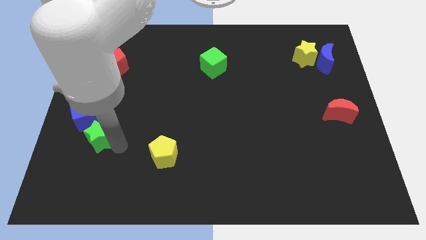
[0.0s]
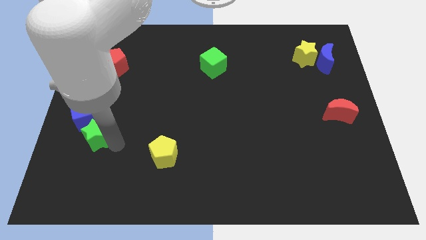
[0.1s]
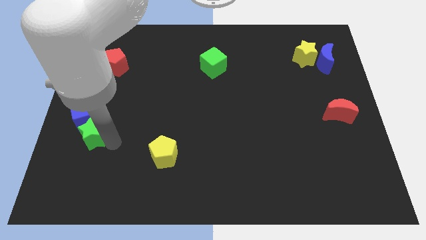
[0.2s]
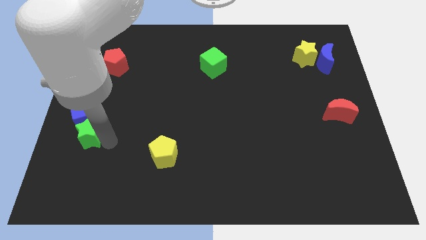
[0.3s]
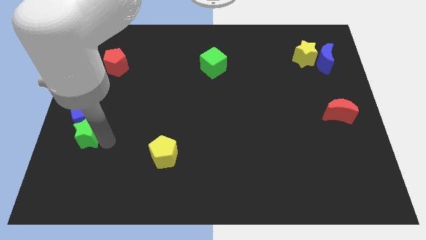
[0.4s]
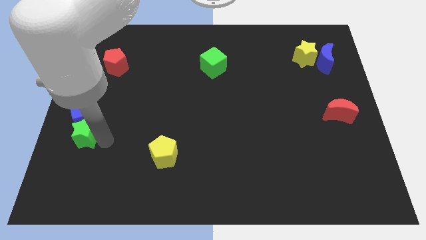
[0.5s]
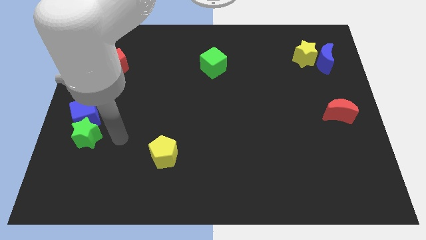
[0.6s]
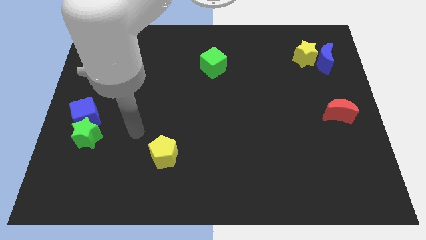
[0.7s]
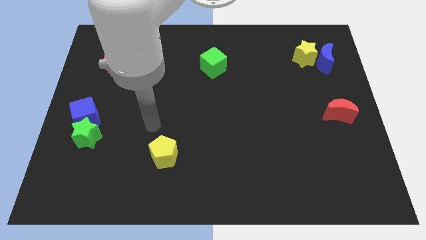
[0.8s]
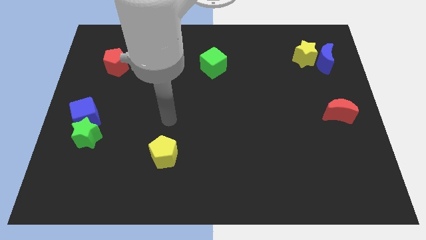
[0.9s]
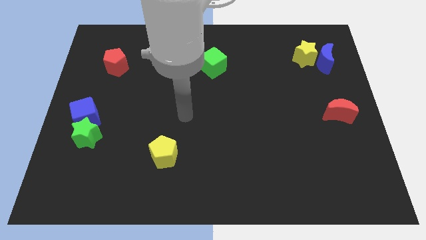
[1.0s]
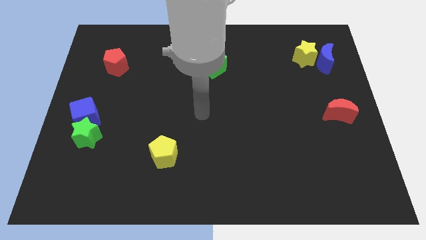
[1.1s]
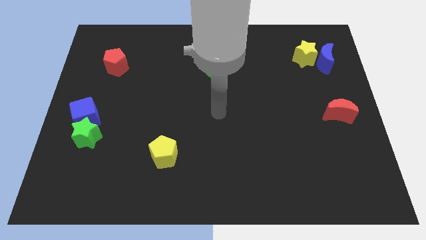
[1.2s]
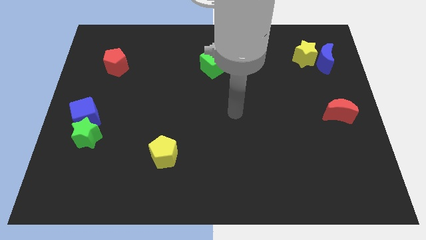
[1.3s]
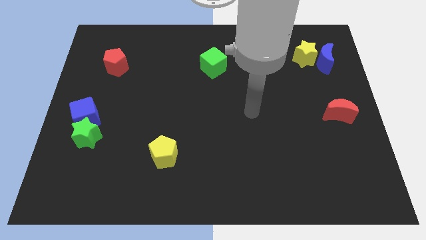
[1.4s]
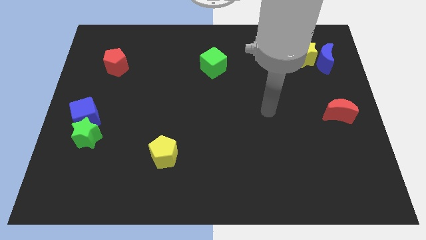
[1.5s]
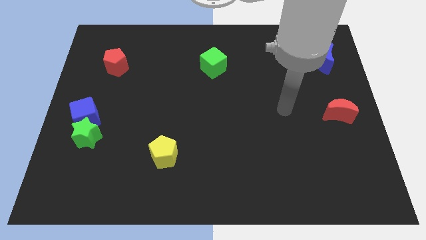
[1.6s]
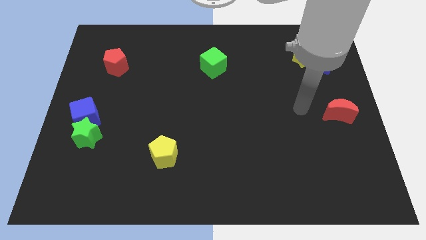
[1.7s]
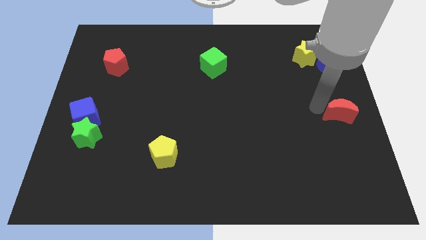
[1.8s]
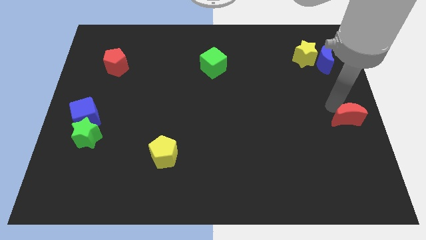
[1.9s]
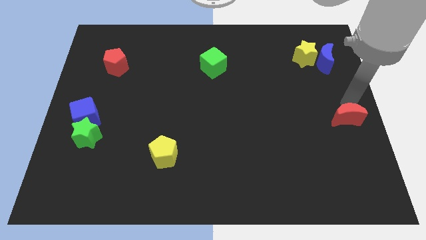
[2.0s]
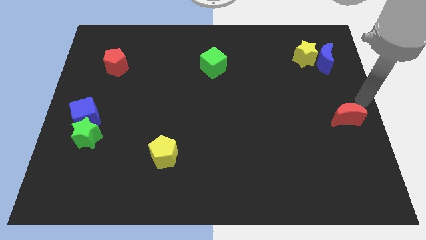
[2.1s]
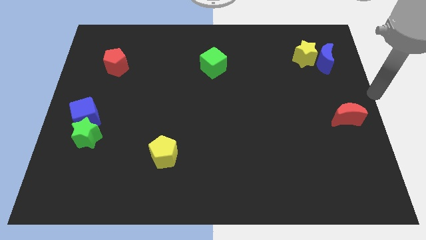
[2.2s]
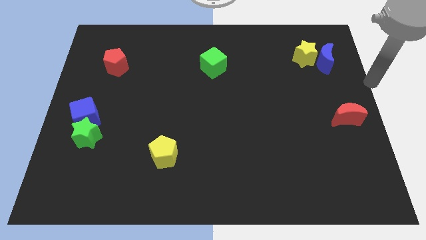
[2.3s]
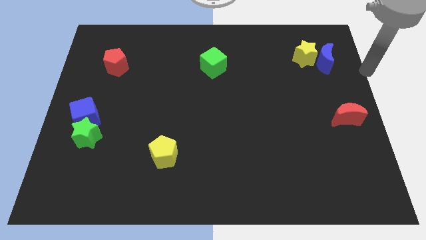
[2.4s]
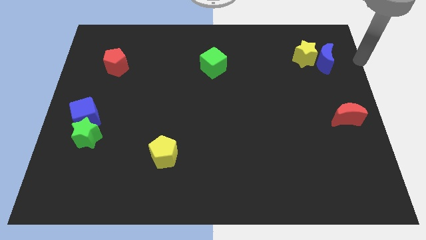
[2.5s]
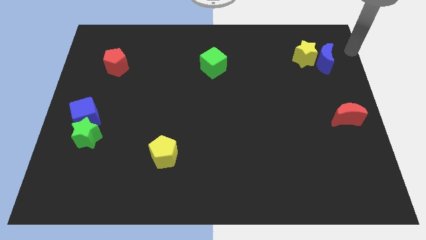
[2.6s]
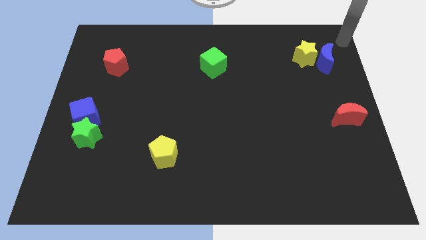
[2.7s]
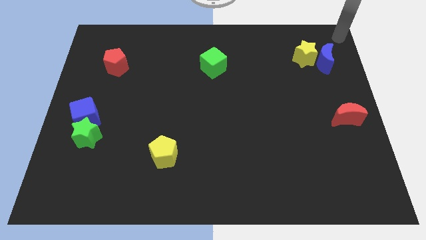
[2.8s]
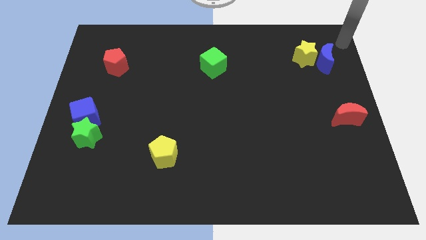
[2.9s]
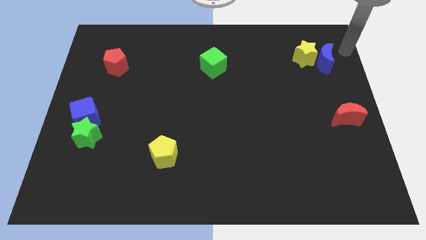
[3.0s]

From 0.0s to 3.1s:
place the arm to the top right of the blue moon

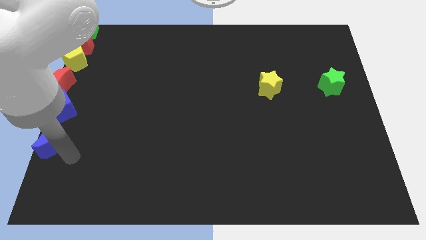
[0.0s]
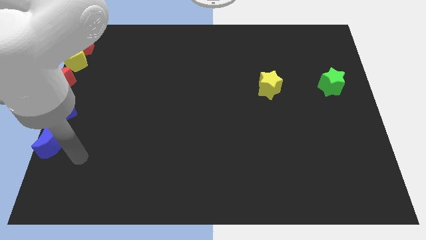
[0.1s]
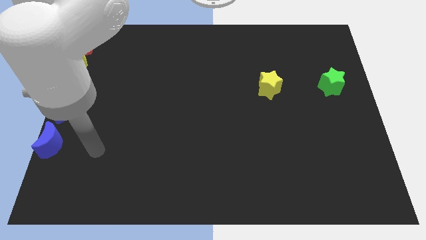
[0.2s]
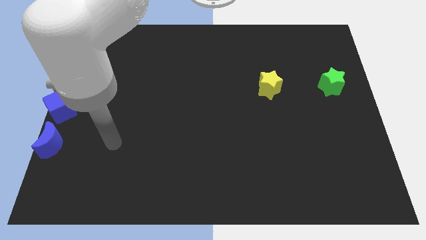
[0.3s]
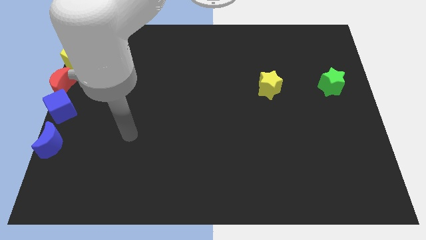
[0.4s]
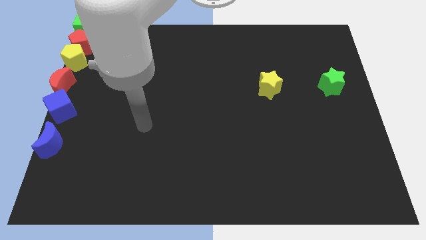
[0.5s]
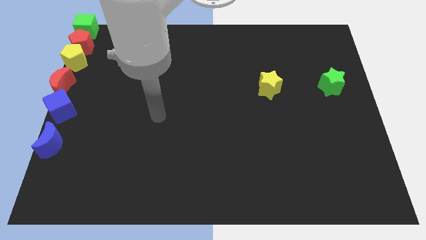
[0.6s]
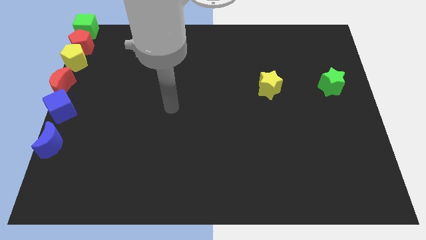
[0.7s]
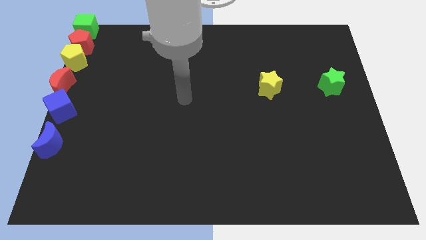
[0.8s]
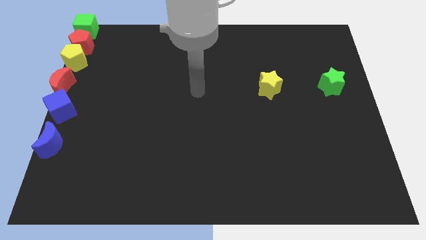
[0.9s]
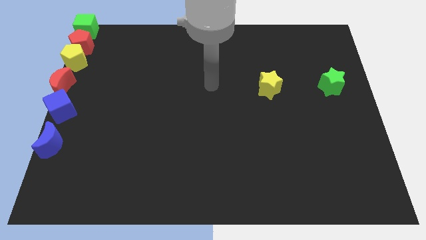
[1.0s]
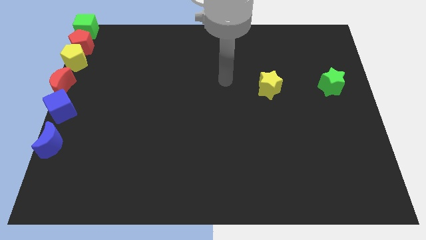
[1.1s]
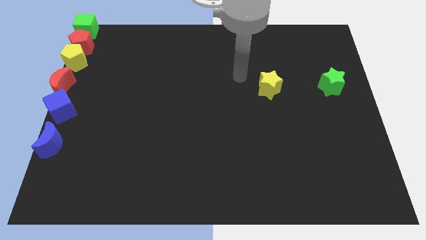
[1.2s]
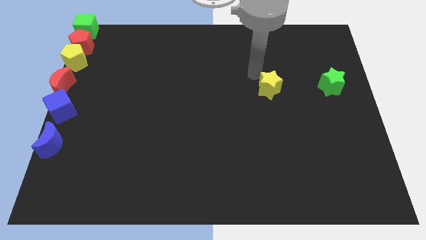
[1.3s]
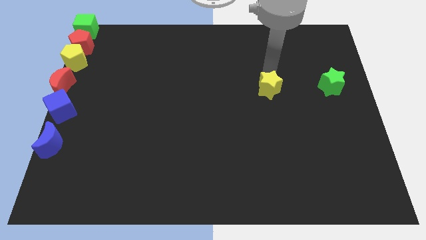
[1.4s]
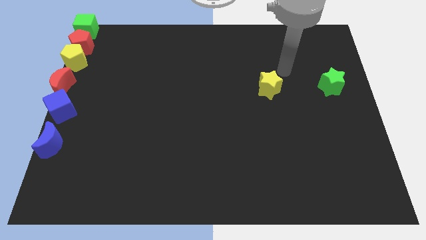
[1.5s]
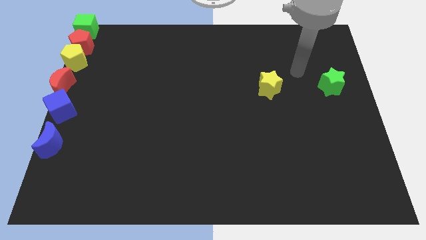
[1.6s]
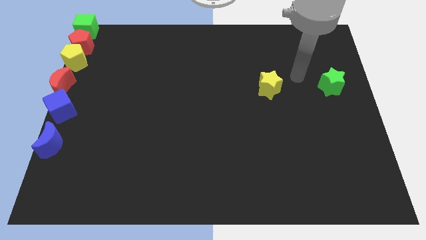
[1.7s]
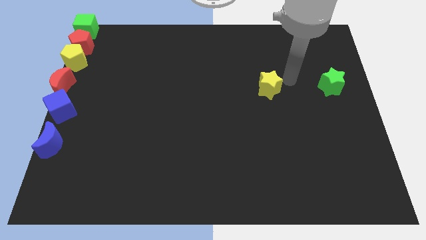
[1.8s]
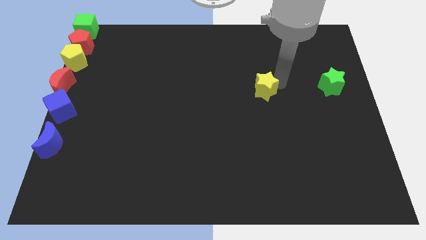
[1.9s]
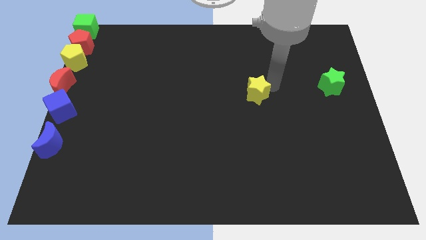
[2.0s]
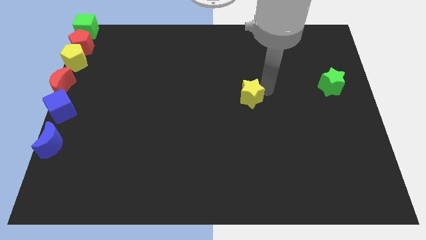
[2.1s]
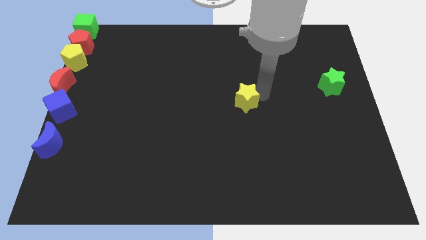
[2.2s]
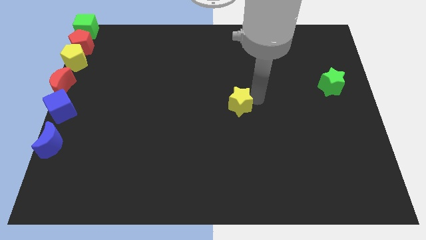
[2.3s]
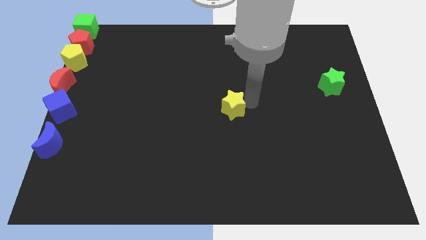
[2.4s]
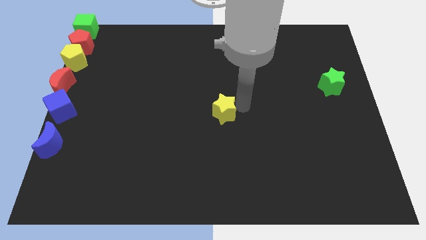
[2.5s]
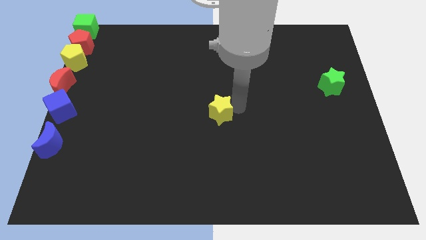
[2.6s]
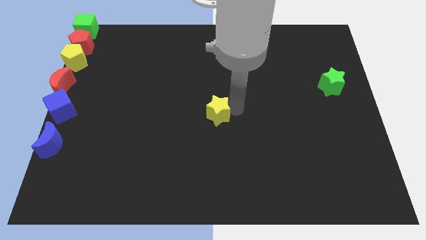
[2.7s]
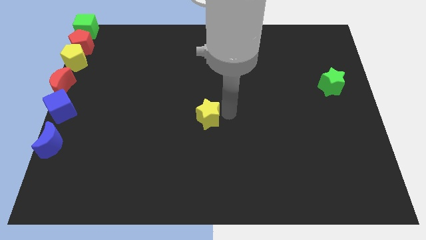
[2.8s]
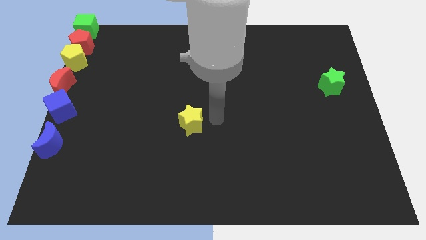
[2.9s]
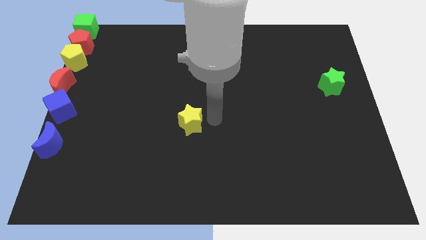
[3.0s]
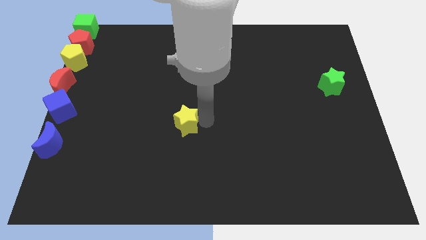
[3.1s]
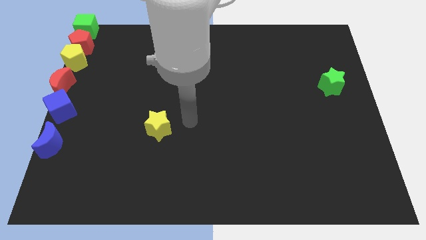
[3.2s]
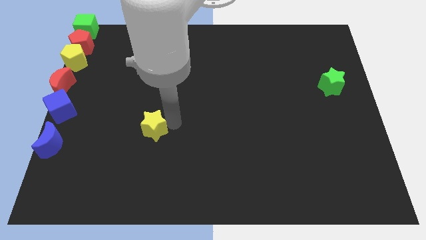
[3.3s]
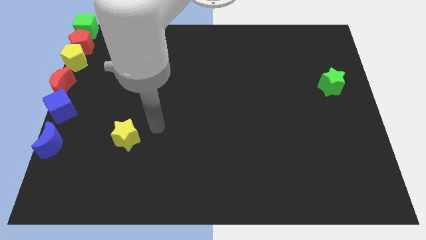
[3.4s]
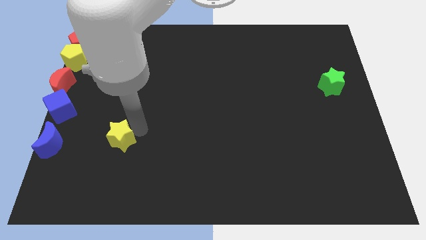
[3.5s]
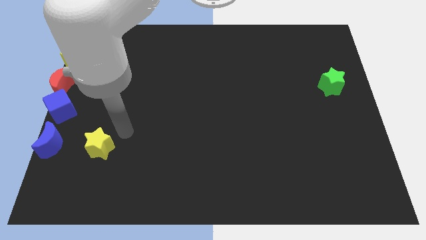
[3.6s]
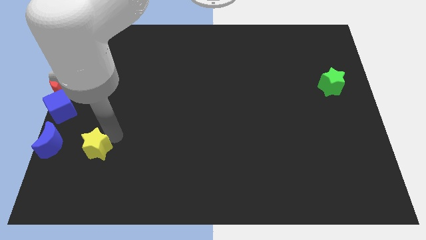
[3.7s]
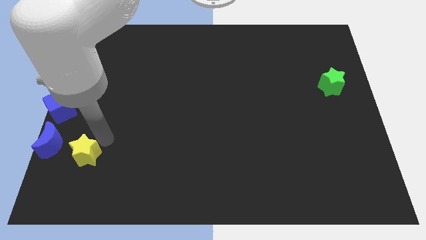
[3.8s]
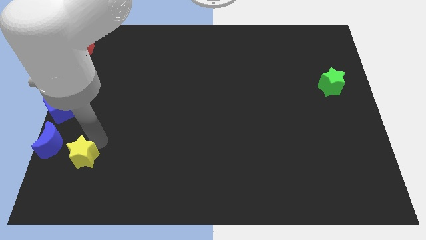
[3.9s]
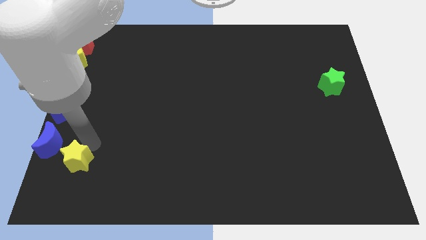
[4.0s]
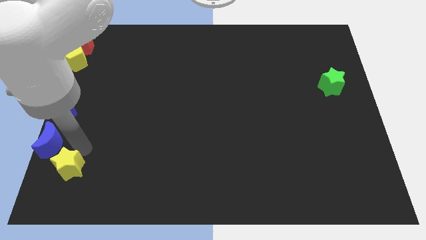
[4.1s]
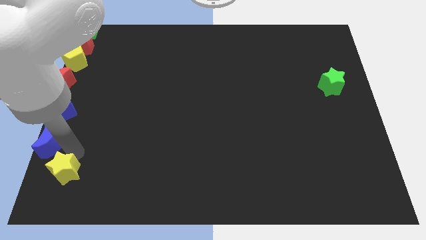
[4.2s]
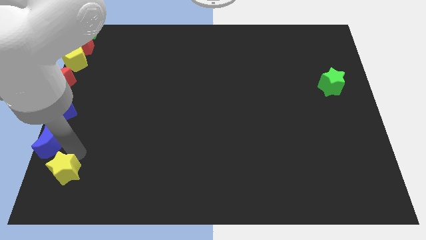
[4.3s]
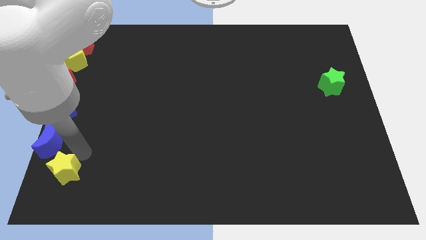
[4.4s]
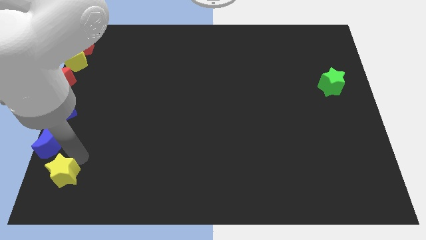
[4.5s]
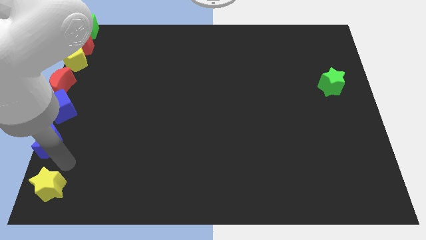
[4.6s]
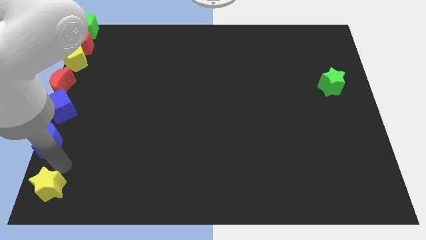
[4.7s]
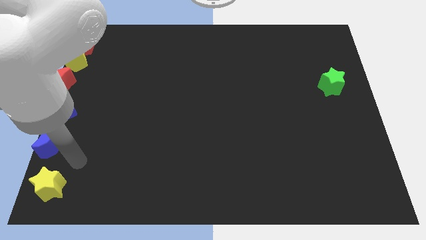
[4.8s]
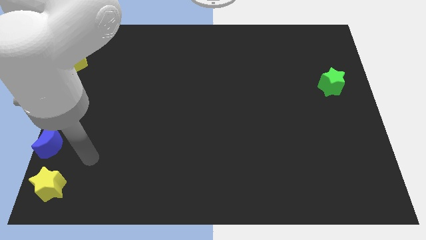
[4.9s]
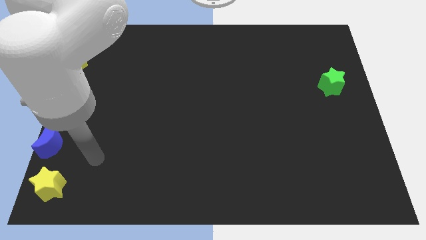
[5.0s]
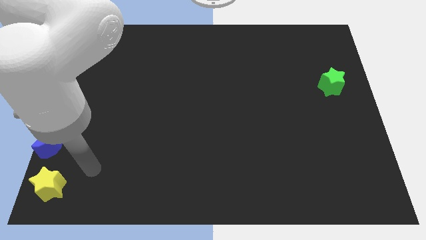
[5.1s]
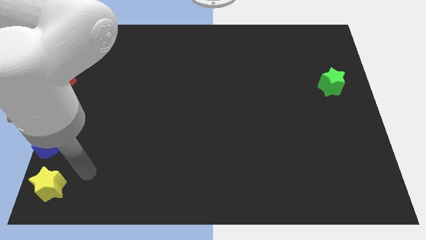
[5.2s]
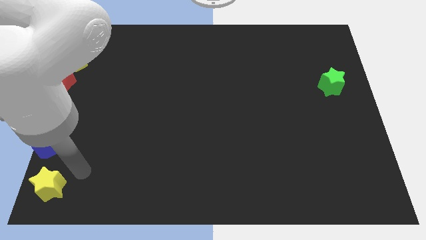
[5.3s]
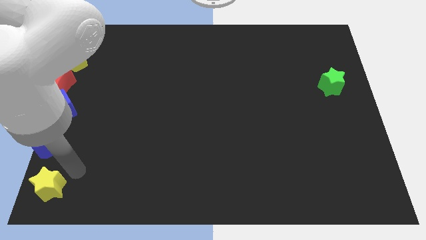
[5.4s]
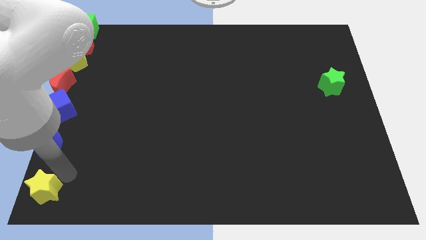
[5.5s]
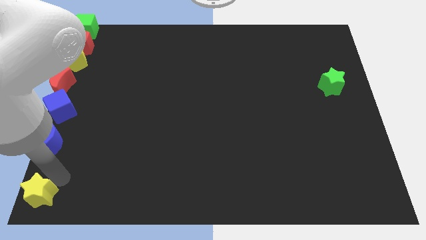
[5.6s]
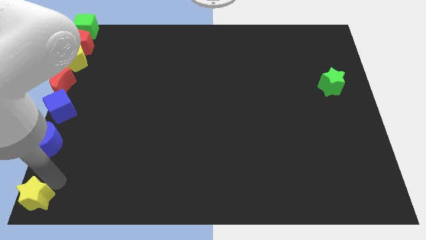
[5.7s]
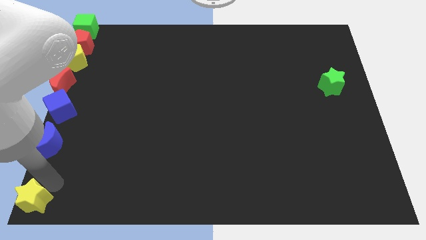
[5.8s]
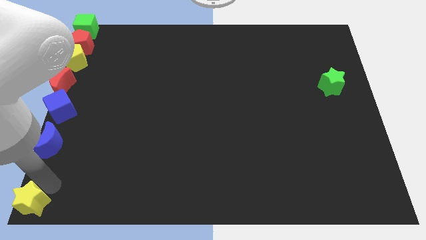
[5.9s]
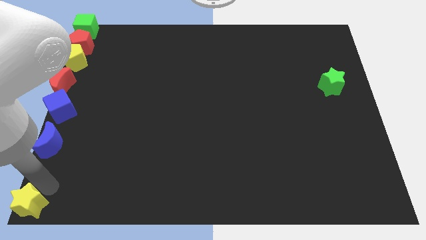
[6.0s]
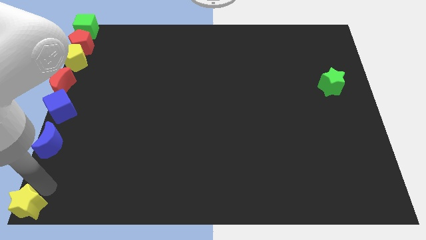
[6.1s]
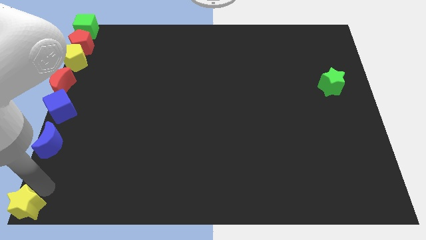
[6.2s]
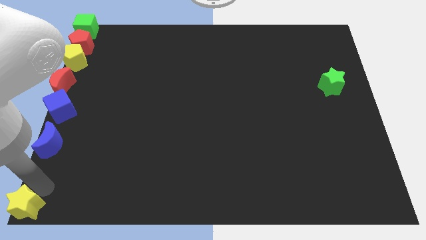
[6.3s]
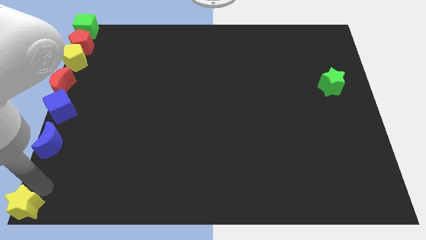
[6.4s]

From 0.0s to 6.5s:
place the yellow star at the bottom left corner of the board
